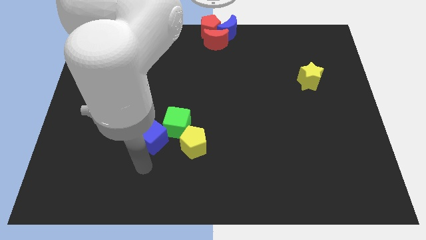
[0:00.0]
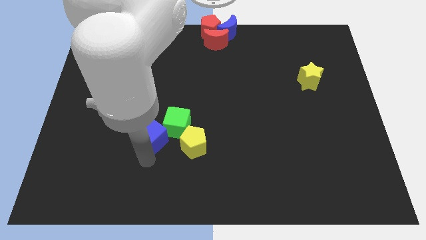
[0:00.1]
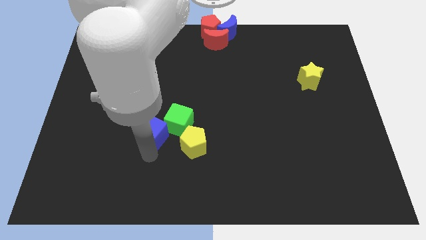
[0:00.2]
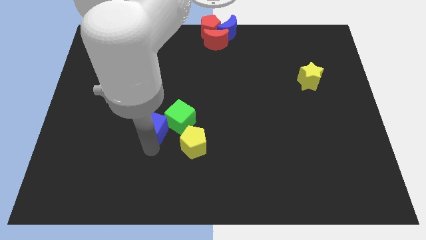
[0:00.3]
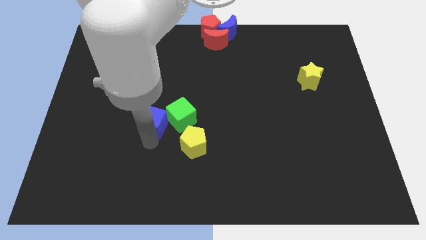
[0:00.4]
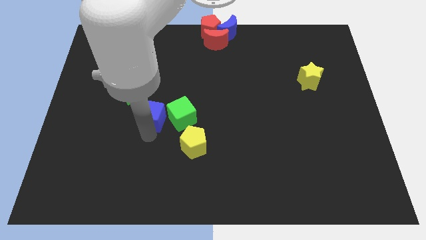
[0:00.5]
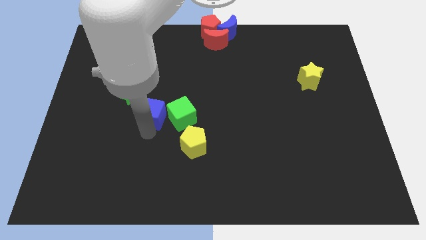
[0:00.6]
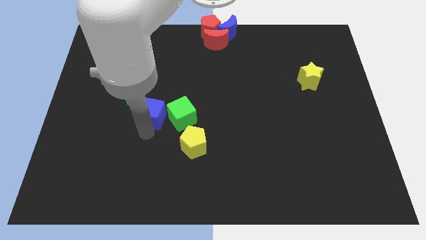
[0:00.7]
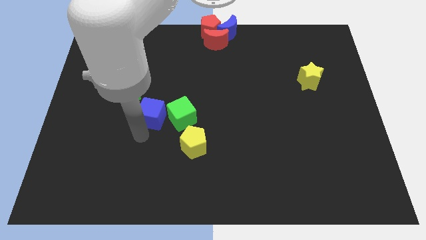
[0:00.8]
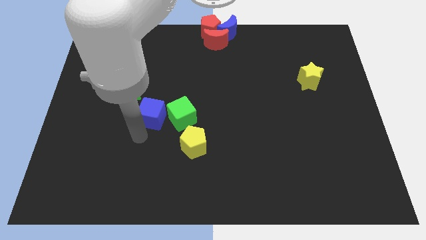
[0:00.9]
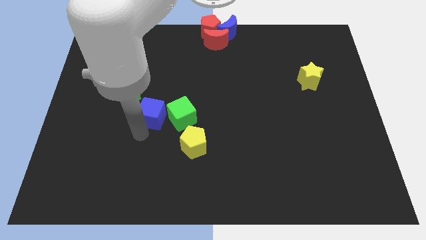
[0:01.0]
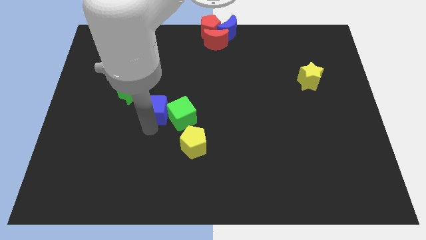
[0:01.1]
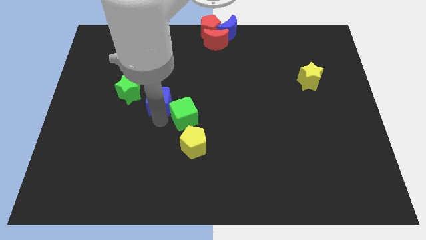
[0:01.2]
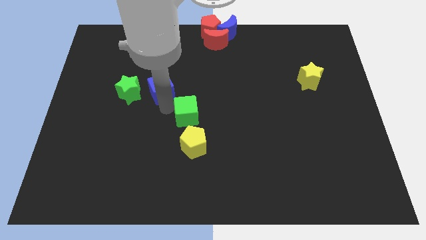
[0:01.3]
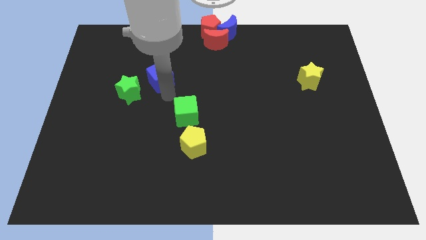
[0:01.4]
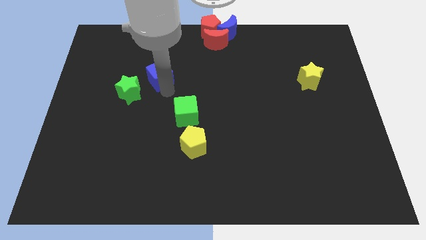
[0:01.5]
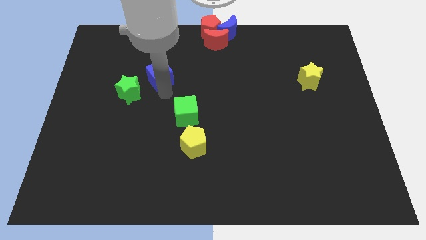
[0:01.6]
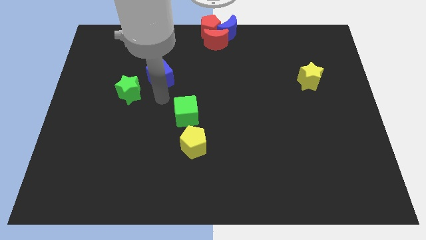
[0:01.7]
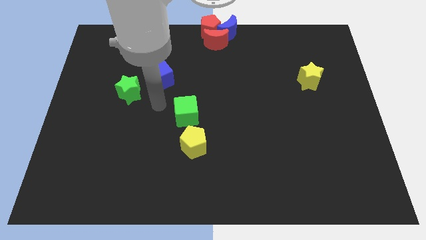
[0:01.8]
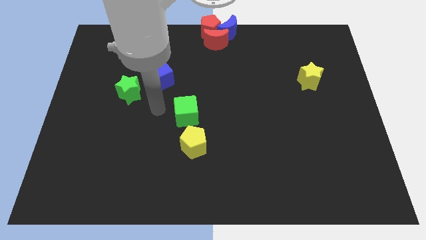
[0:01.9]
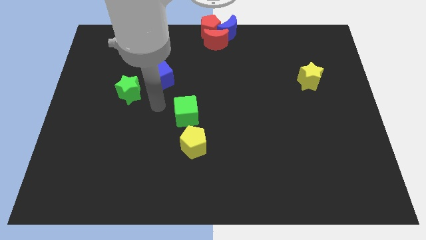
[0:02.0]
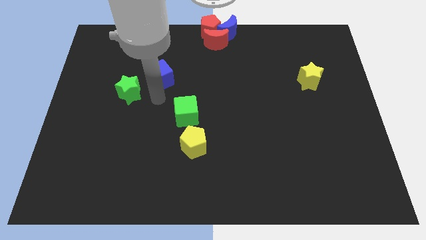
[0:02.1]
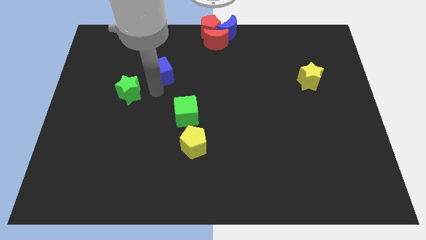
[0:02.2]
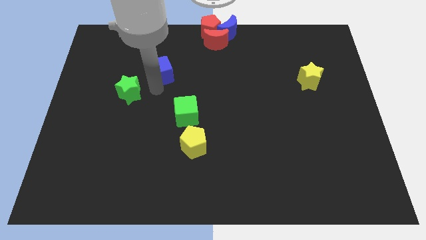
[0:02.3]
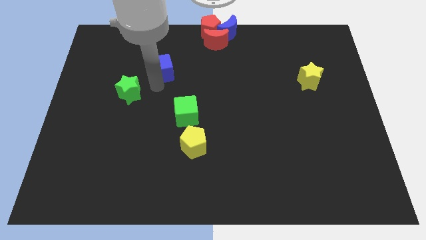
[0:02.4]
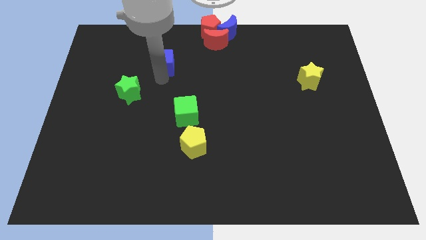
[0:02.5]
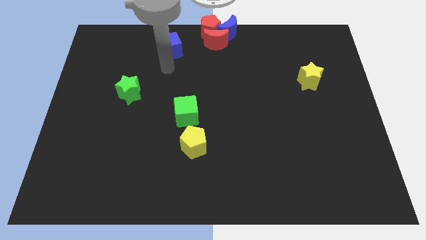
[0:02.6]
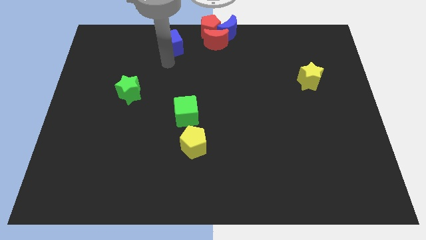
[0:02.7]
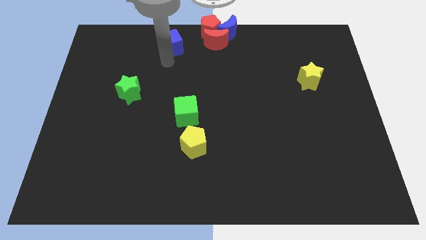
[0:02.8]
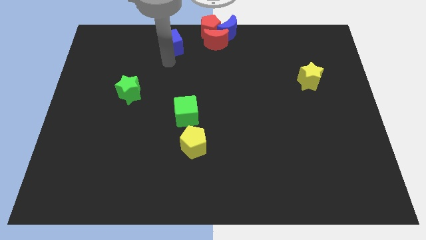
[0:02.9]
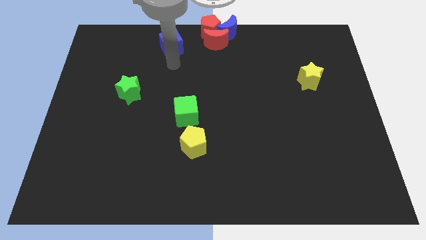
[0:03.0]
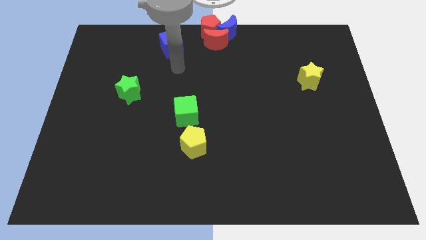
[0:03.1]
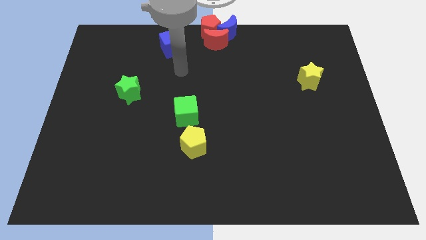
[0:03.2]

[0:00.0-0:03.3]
drag the blue cube towards the top center

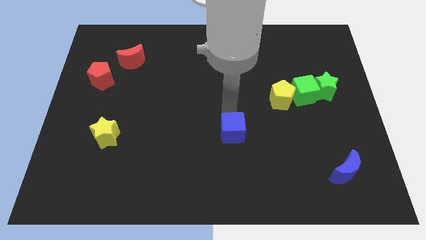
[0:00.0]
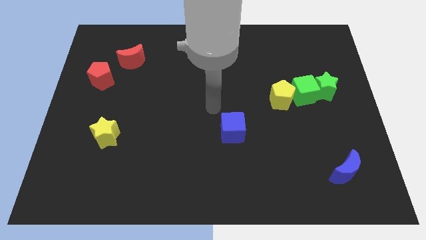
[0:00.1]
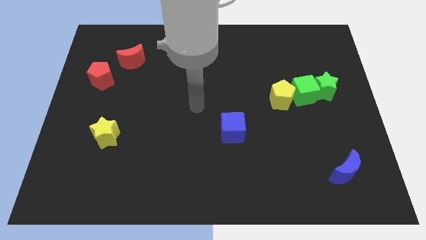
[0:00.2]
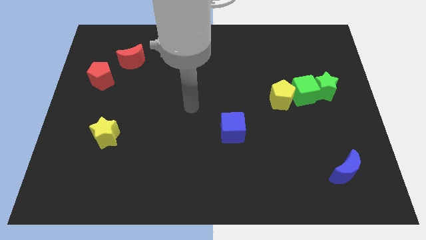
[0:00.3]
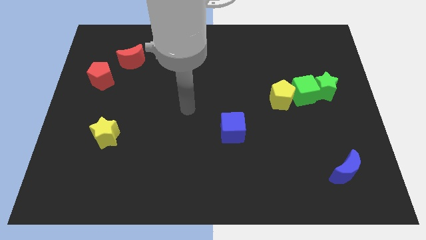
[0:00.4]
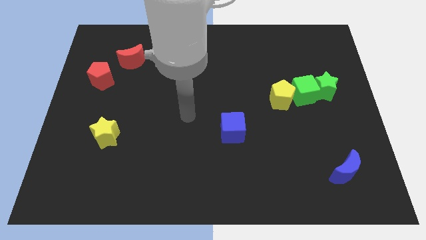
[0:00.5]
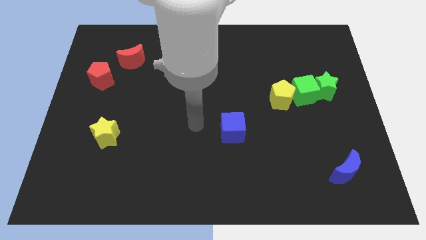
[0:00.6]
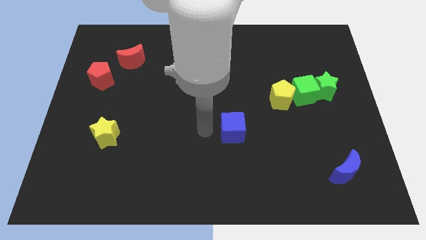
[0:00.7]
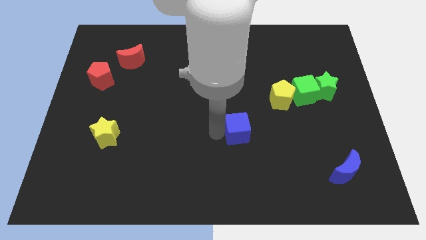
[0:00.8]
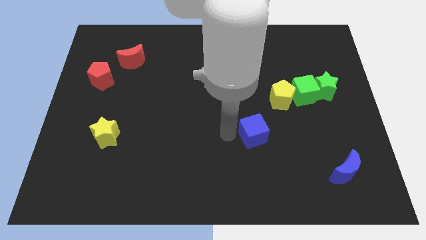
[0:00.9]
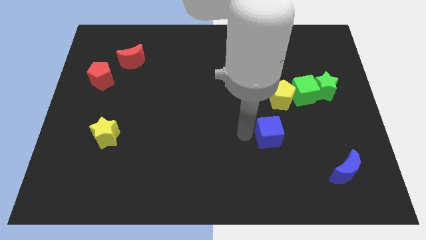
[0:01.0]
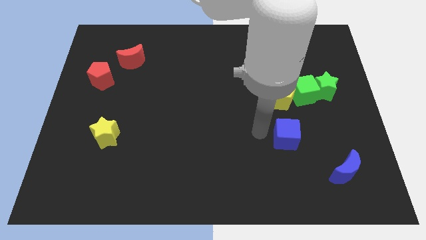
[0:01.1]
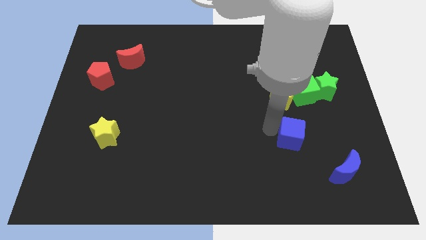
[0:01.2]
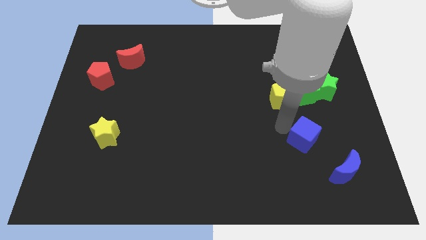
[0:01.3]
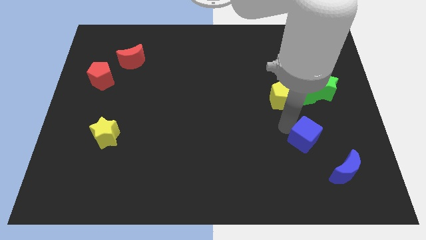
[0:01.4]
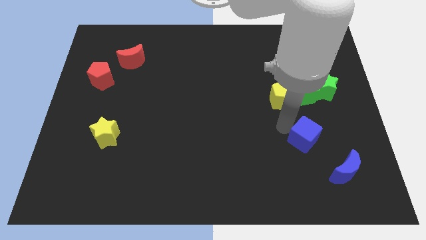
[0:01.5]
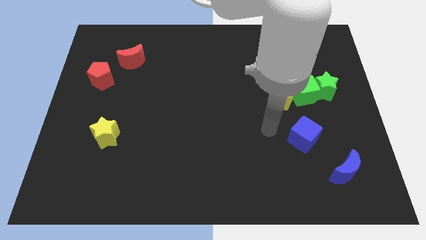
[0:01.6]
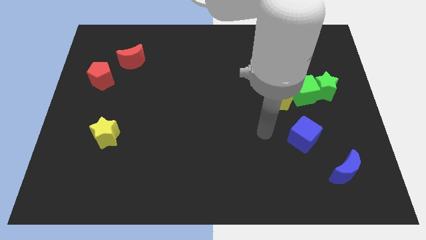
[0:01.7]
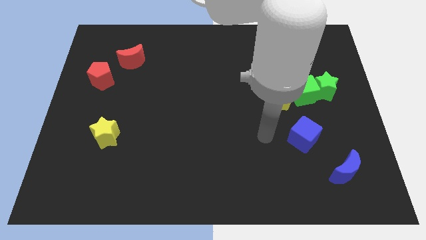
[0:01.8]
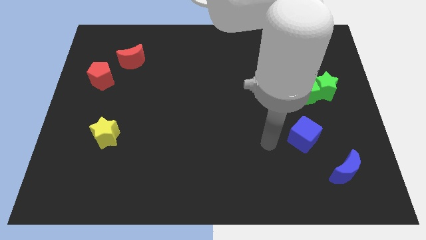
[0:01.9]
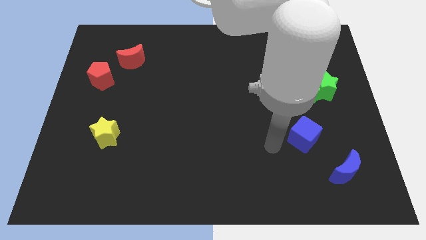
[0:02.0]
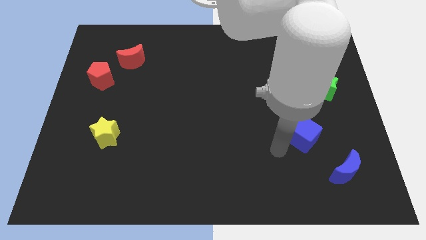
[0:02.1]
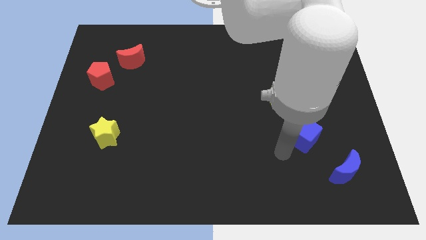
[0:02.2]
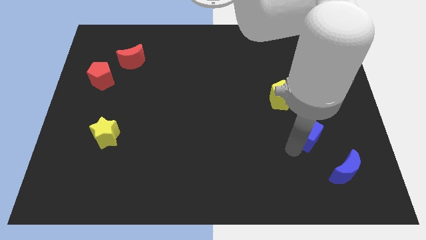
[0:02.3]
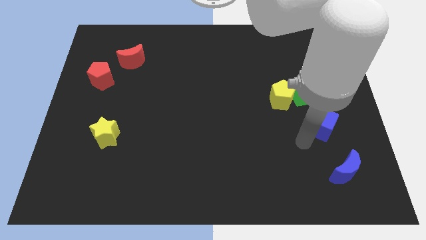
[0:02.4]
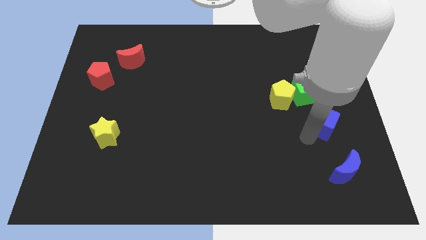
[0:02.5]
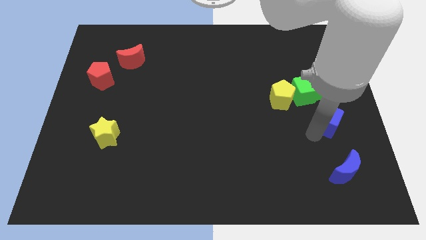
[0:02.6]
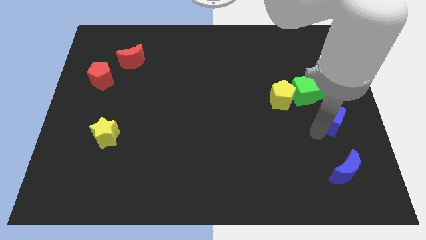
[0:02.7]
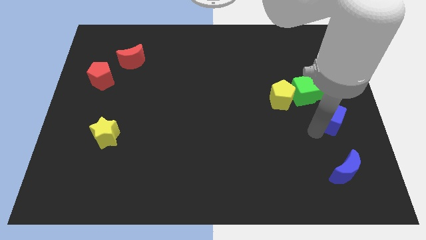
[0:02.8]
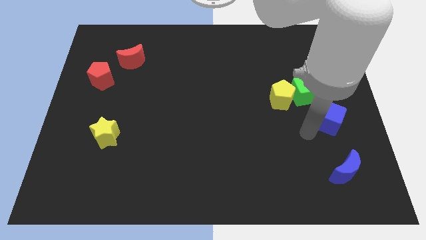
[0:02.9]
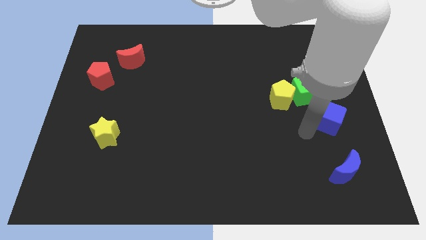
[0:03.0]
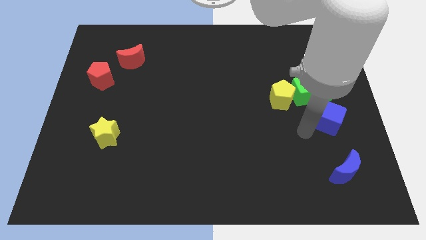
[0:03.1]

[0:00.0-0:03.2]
push the blue cube near the green blocks

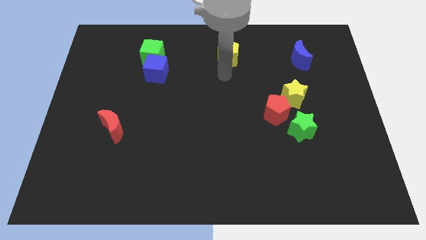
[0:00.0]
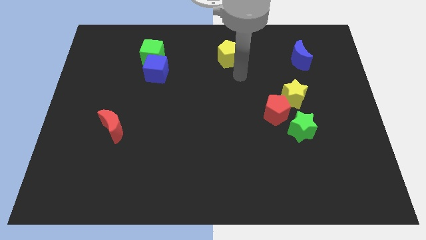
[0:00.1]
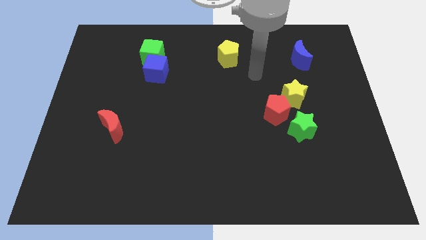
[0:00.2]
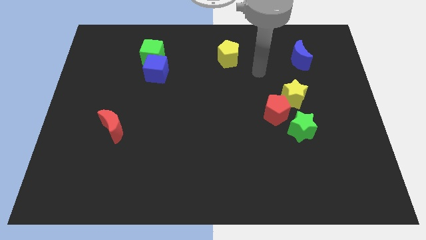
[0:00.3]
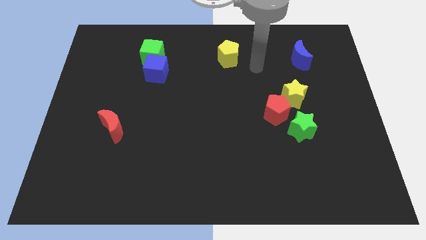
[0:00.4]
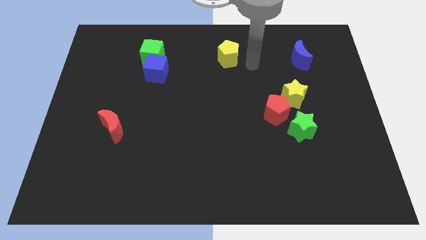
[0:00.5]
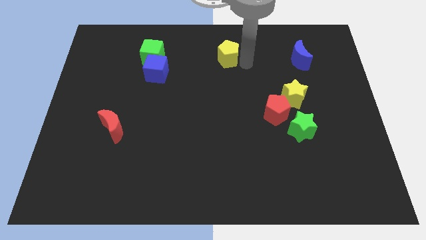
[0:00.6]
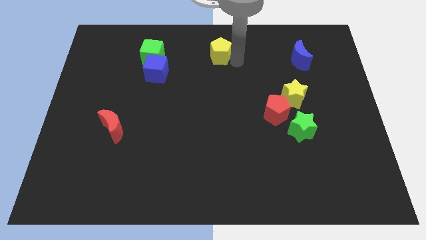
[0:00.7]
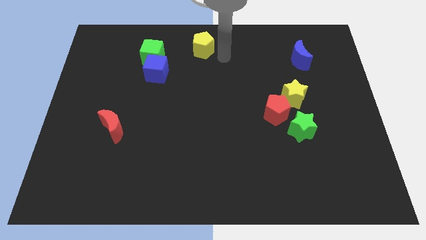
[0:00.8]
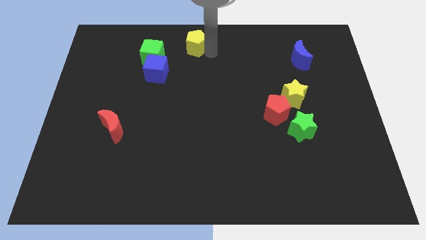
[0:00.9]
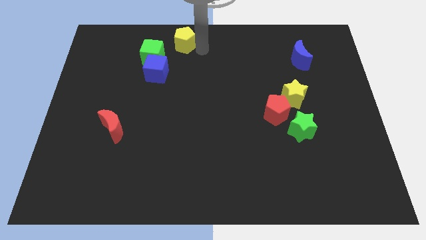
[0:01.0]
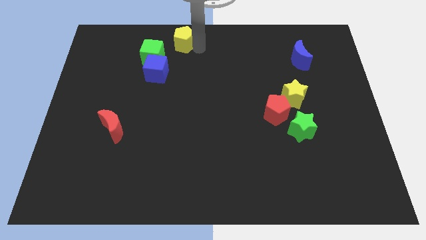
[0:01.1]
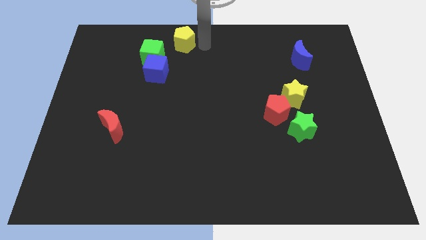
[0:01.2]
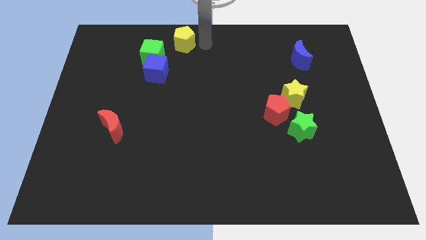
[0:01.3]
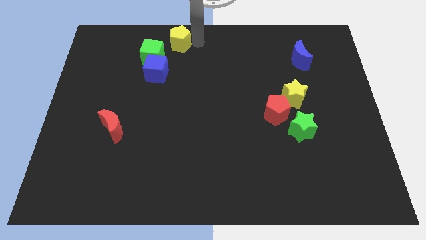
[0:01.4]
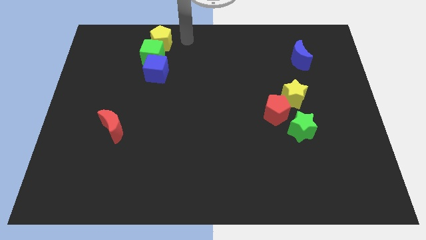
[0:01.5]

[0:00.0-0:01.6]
move the yellow pentagon above the green cube

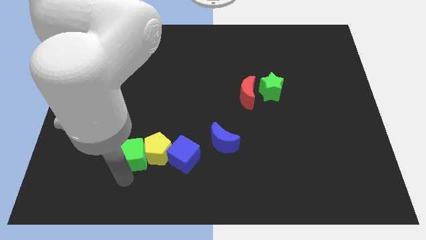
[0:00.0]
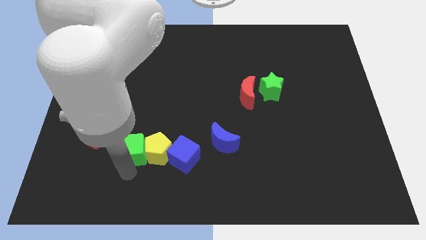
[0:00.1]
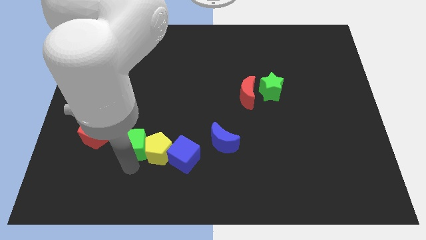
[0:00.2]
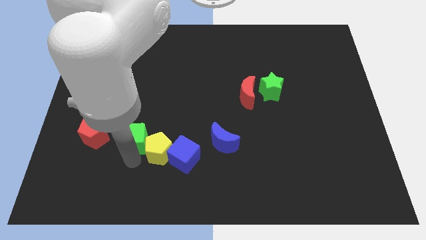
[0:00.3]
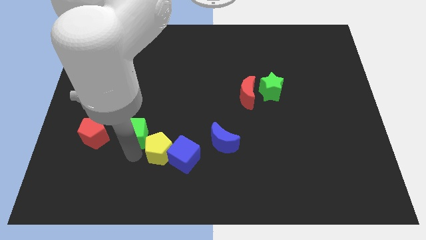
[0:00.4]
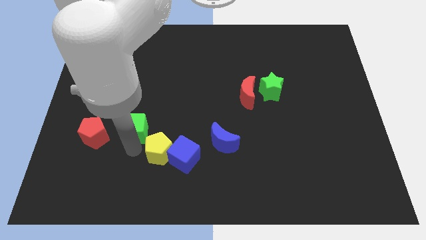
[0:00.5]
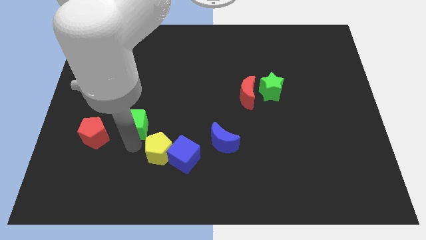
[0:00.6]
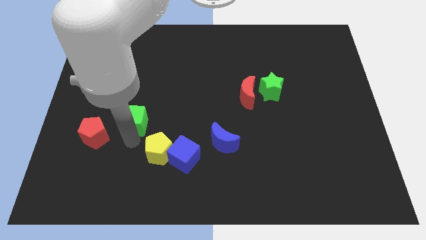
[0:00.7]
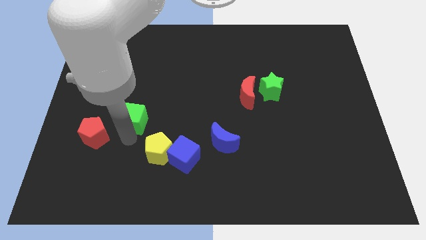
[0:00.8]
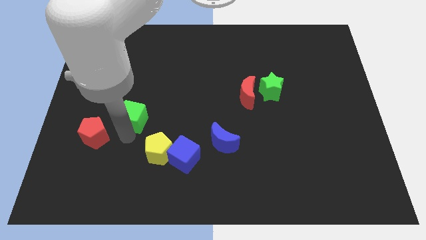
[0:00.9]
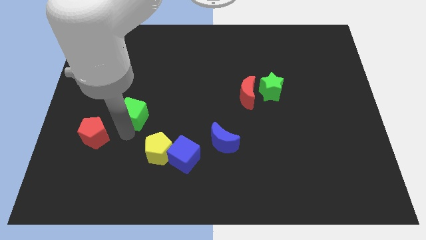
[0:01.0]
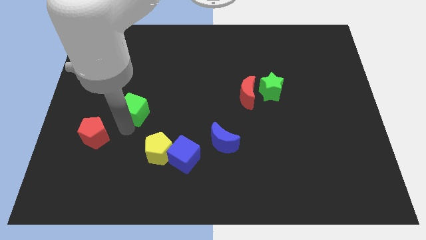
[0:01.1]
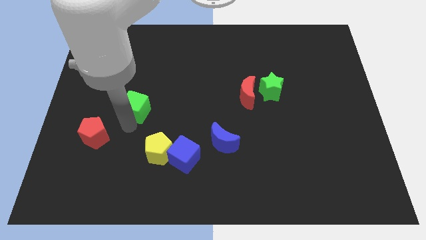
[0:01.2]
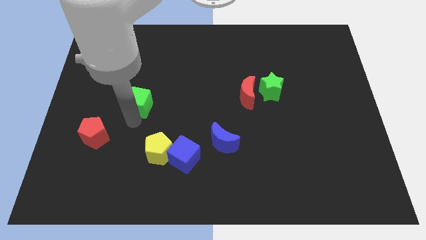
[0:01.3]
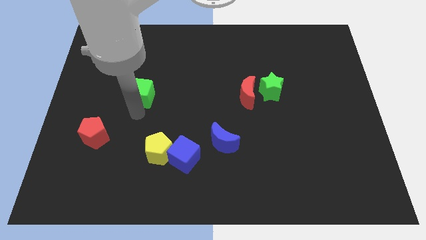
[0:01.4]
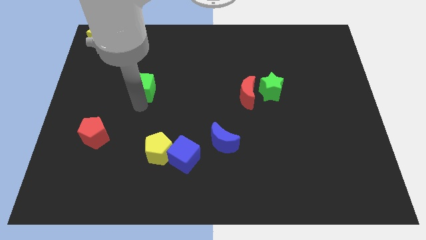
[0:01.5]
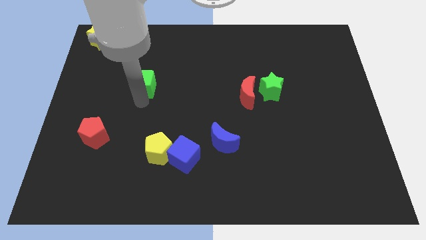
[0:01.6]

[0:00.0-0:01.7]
separate the green cube and the yellow pentagon
